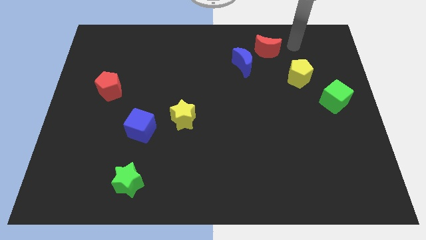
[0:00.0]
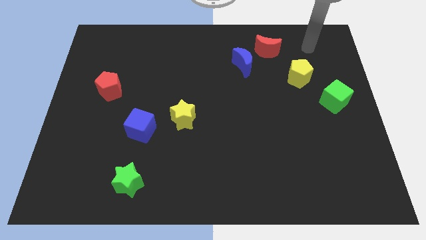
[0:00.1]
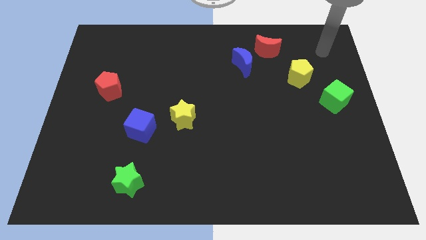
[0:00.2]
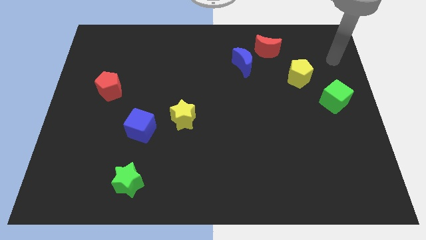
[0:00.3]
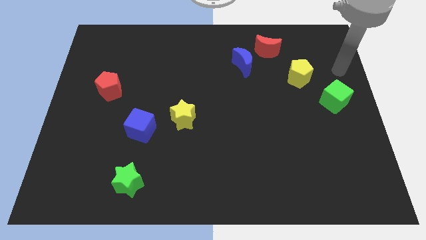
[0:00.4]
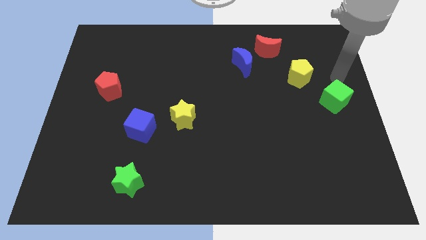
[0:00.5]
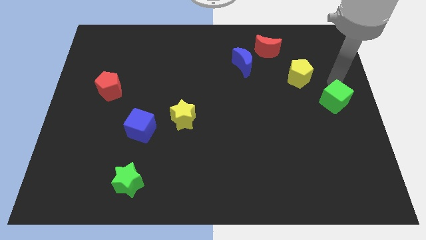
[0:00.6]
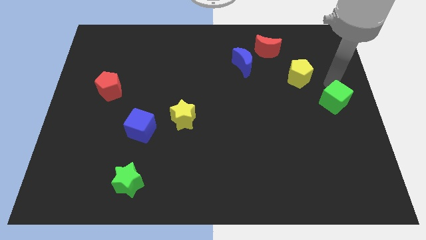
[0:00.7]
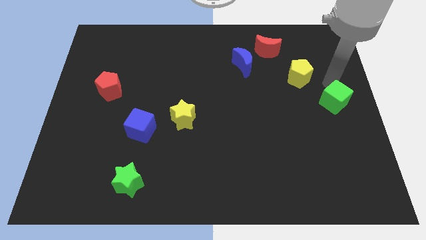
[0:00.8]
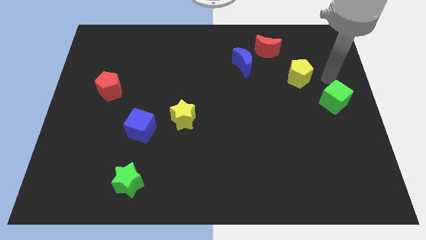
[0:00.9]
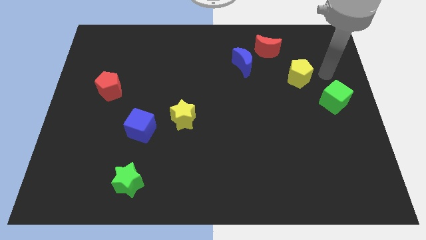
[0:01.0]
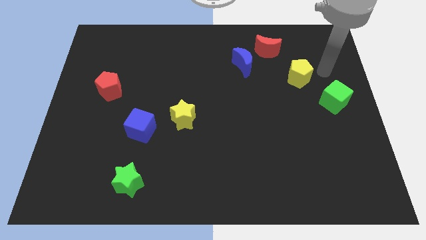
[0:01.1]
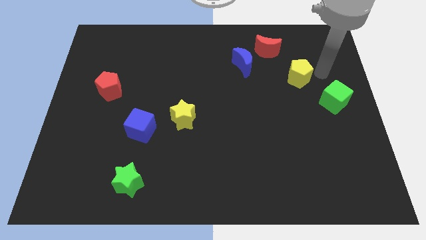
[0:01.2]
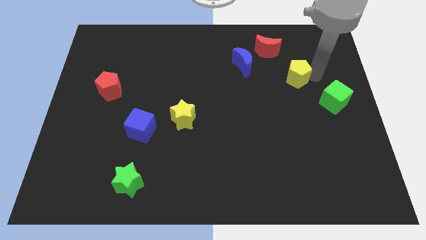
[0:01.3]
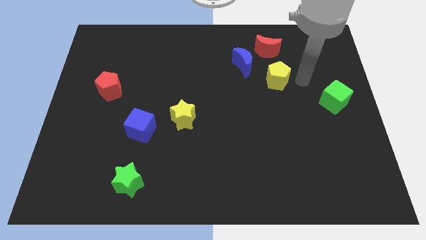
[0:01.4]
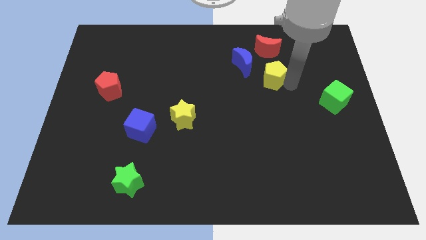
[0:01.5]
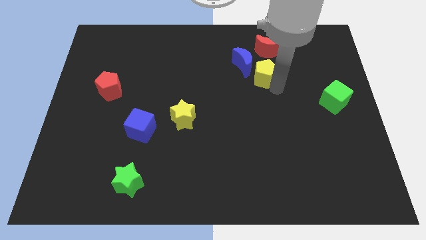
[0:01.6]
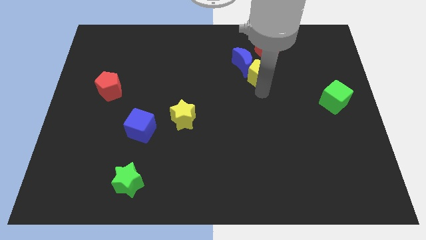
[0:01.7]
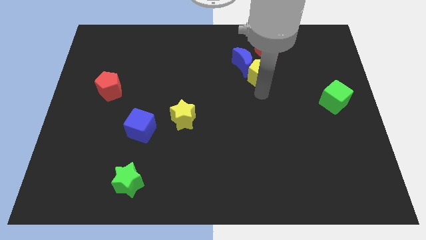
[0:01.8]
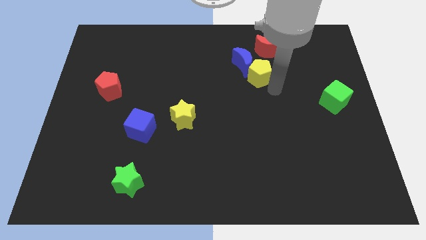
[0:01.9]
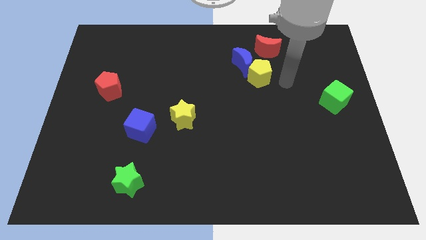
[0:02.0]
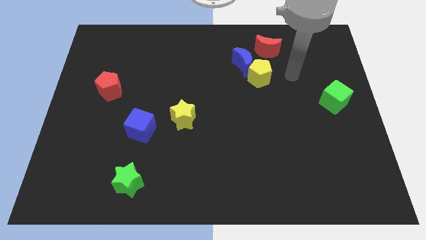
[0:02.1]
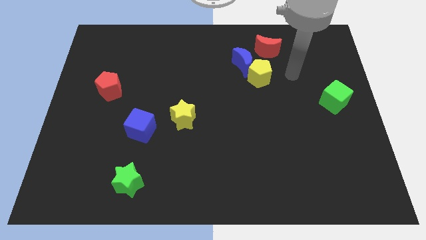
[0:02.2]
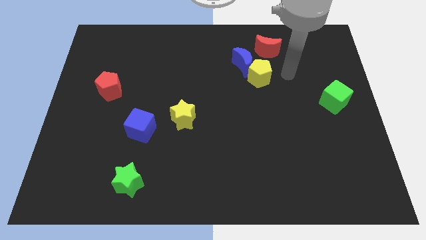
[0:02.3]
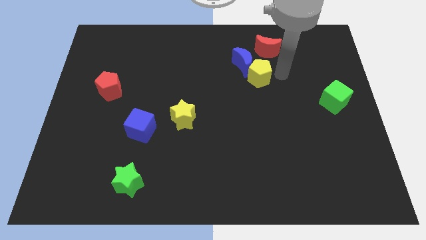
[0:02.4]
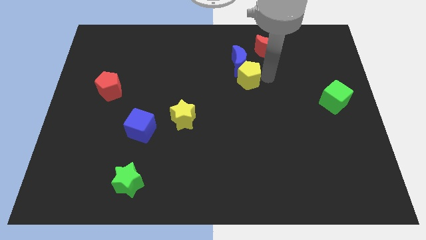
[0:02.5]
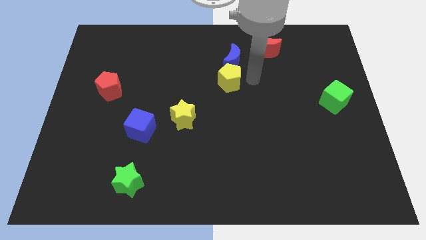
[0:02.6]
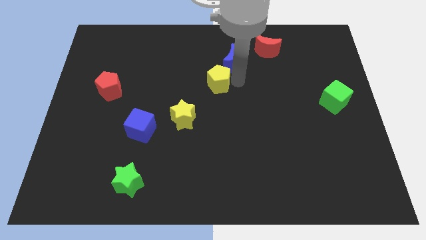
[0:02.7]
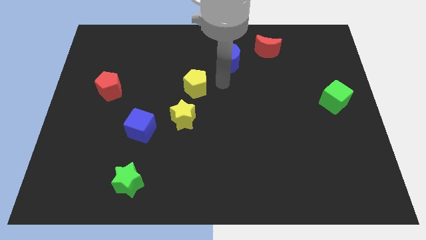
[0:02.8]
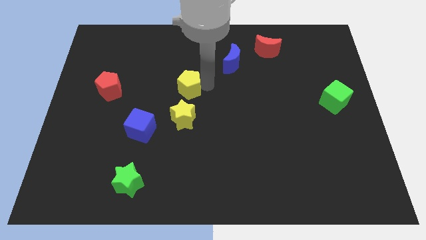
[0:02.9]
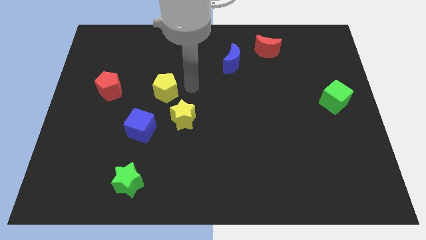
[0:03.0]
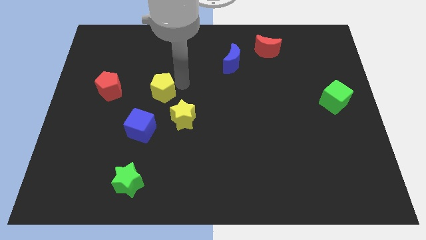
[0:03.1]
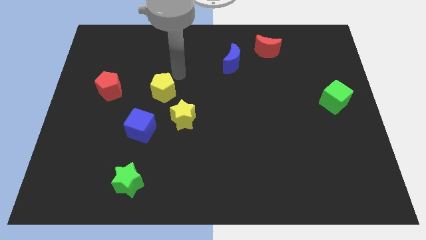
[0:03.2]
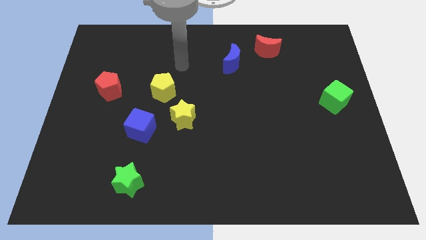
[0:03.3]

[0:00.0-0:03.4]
push the yellow pentagon to the top left of the yellow star

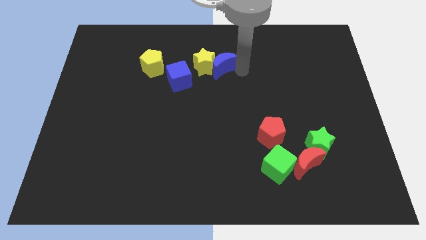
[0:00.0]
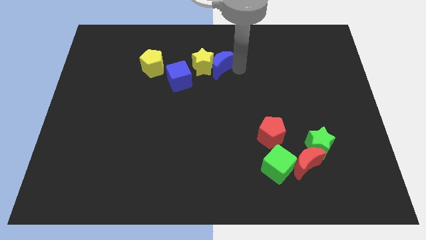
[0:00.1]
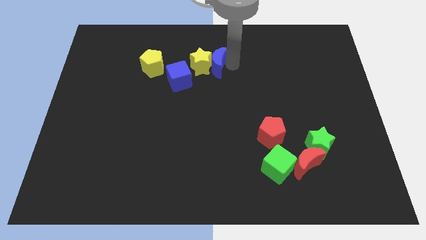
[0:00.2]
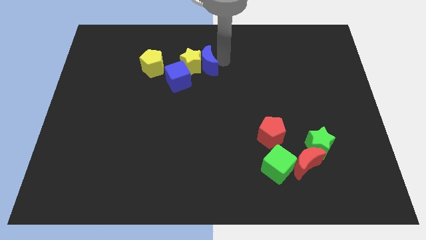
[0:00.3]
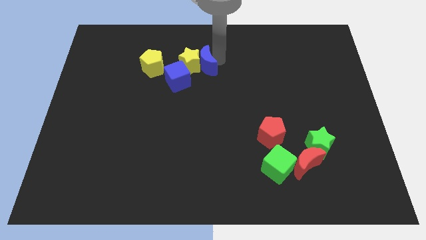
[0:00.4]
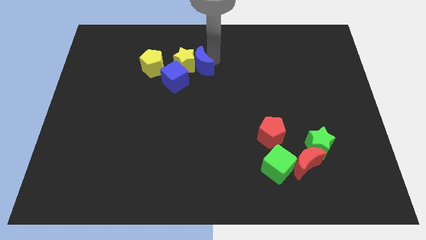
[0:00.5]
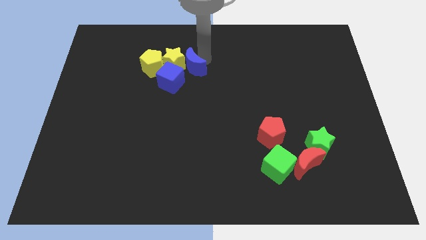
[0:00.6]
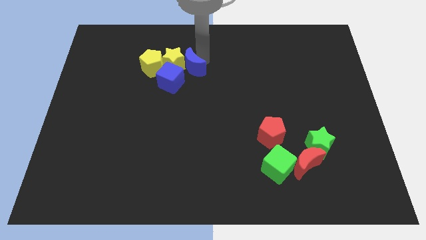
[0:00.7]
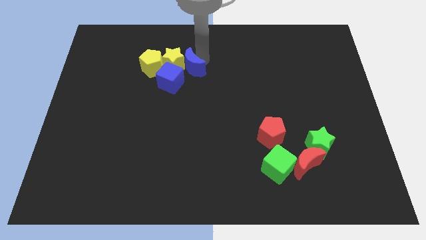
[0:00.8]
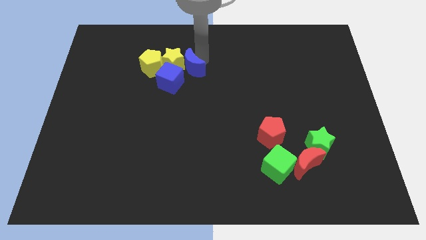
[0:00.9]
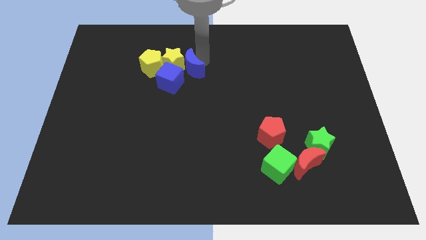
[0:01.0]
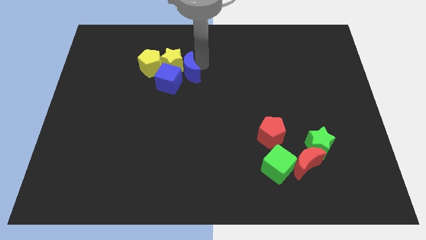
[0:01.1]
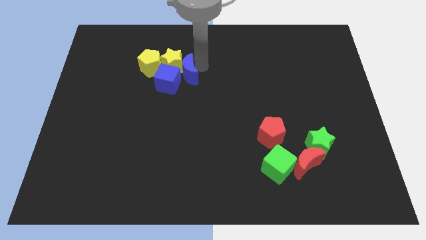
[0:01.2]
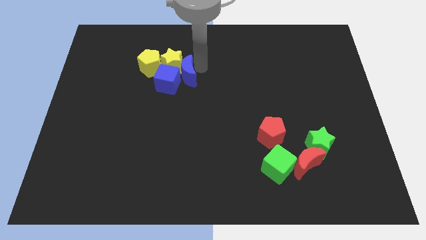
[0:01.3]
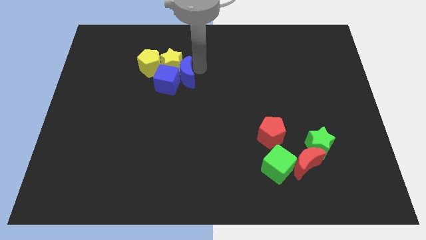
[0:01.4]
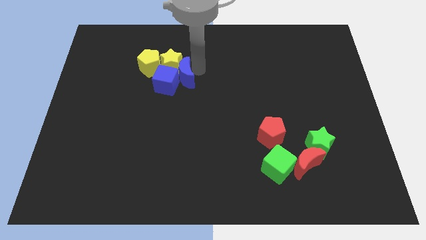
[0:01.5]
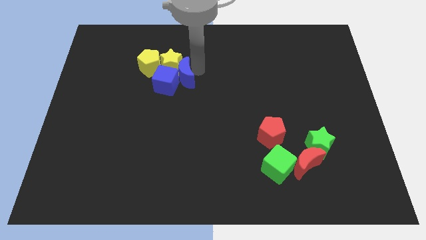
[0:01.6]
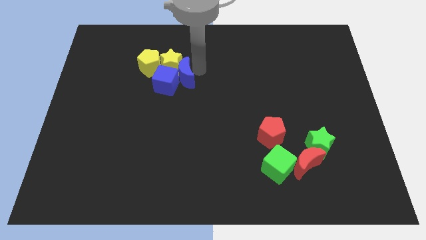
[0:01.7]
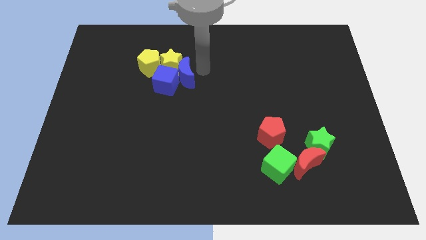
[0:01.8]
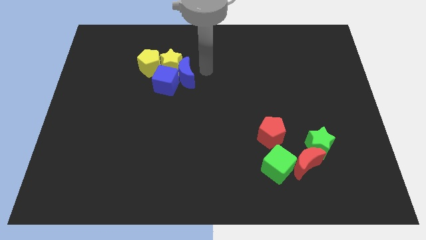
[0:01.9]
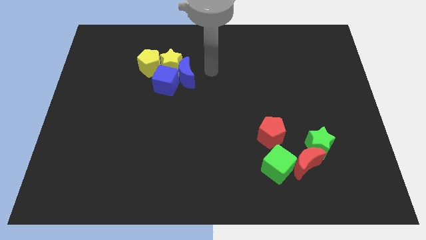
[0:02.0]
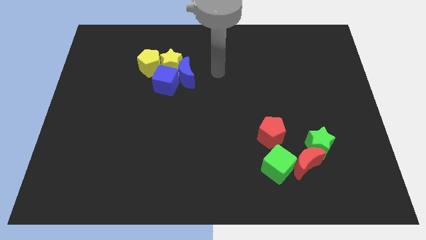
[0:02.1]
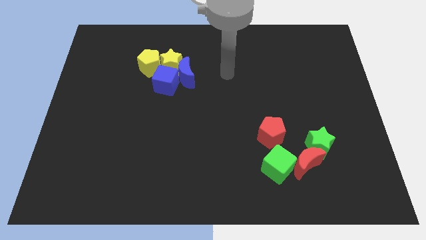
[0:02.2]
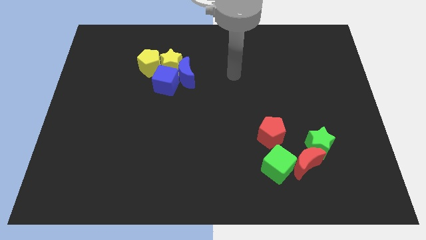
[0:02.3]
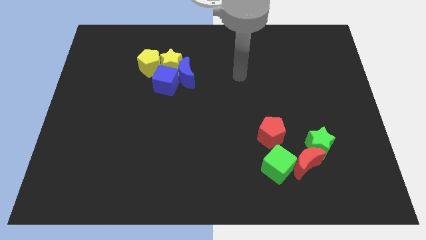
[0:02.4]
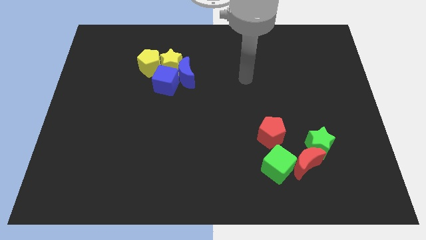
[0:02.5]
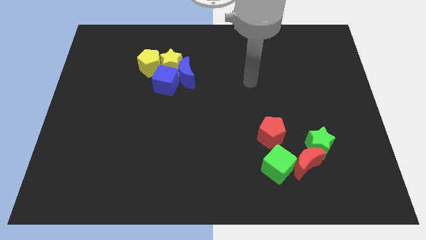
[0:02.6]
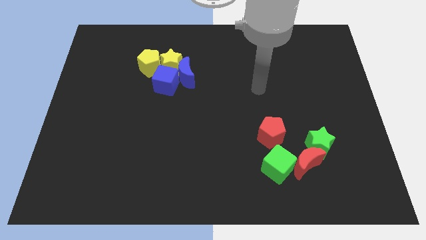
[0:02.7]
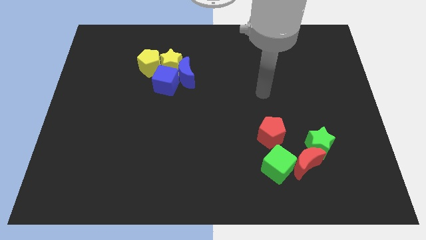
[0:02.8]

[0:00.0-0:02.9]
push the blue half moon into the yellow star and blue cube from the right side

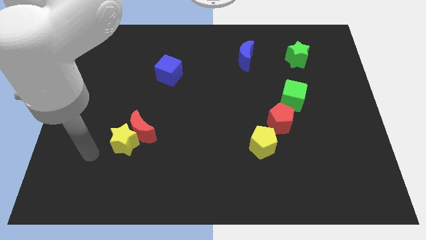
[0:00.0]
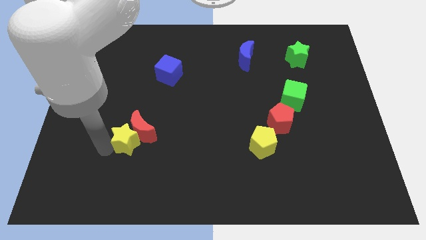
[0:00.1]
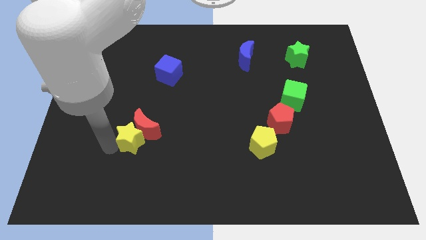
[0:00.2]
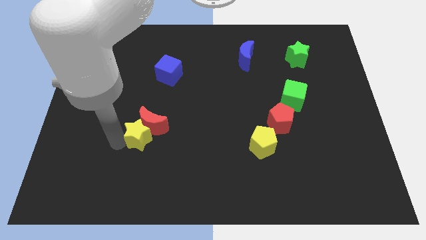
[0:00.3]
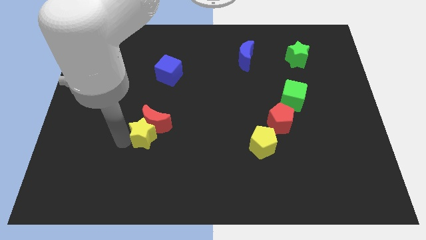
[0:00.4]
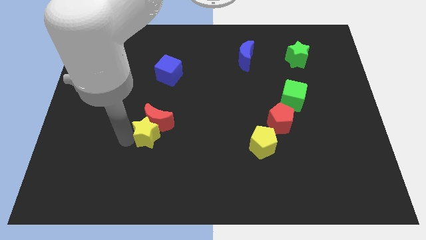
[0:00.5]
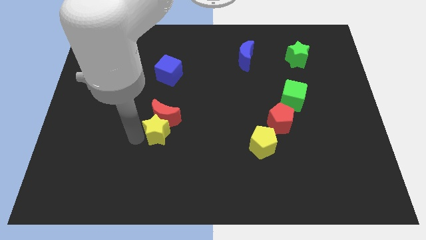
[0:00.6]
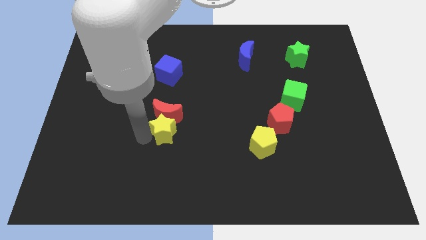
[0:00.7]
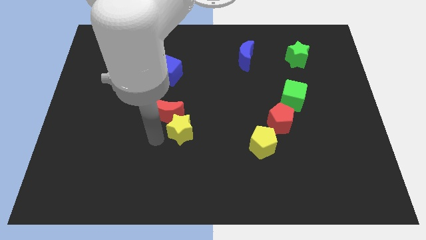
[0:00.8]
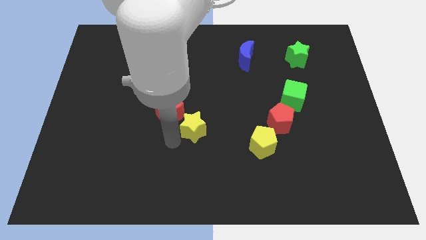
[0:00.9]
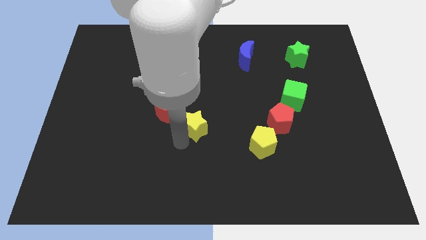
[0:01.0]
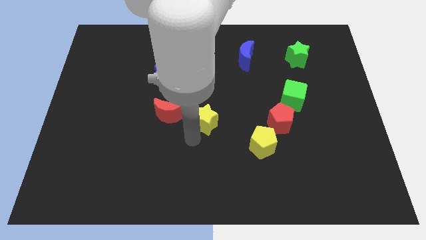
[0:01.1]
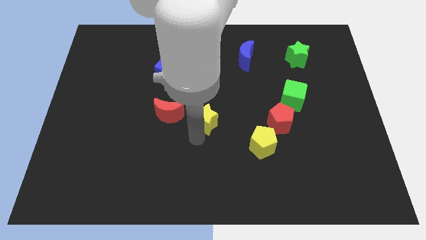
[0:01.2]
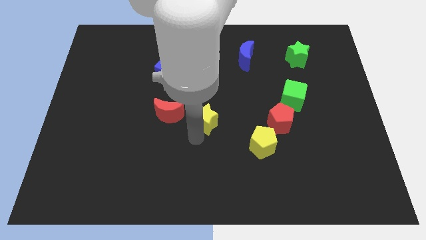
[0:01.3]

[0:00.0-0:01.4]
push the yellow star to the right of the red crescent

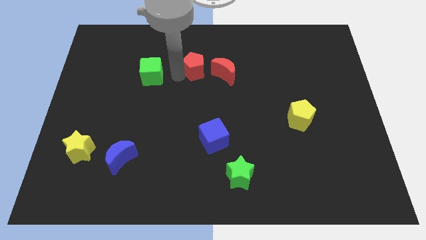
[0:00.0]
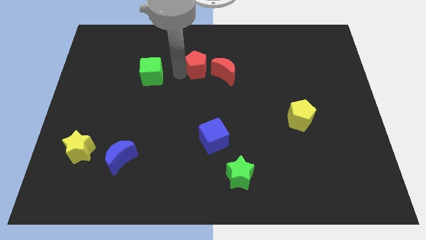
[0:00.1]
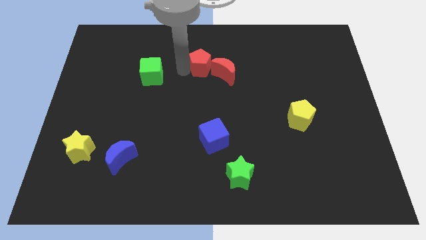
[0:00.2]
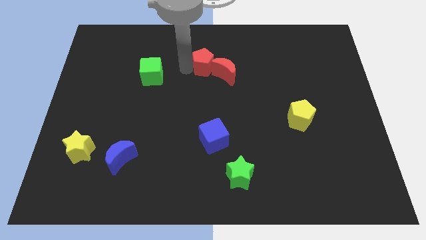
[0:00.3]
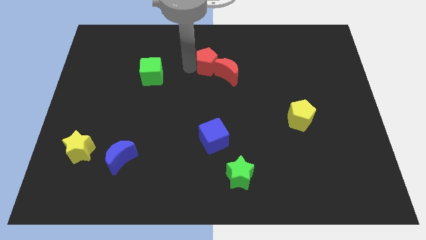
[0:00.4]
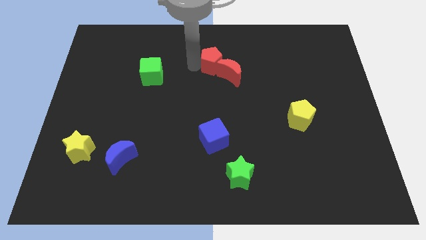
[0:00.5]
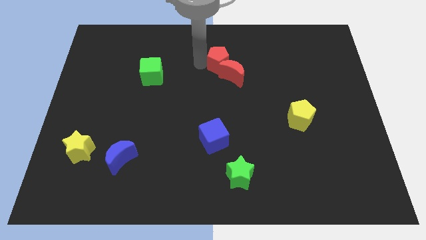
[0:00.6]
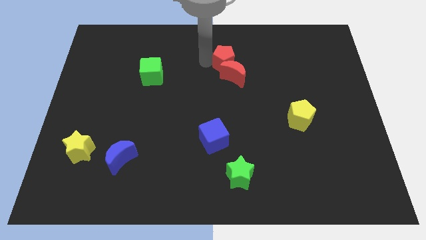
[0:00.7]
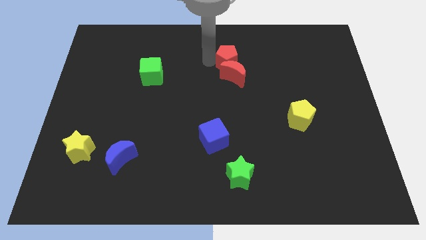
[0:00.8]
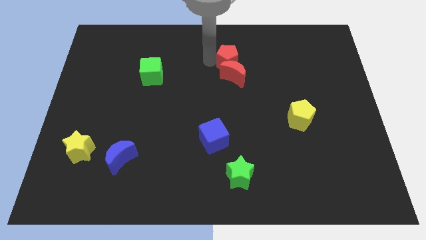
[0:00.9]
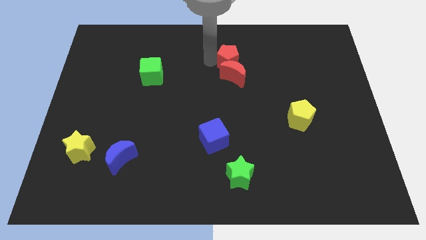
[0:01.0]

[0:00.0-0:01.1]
push the red pentagon to the top side of the red moon

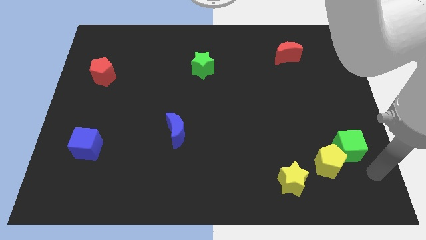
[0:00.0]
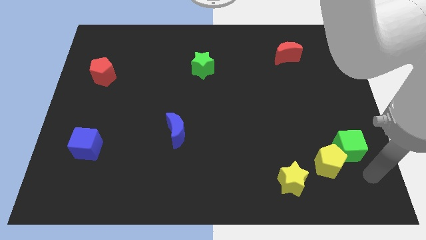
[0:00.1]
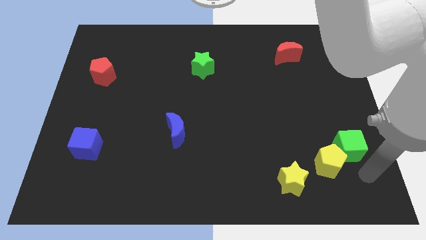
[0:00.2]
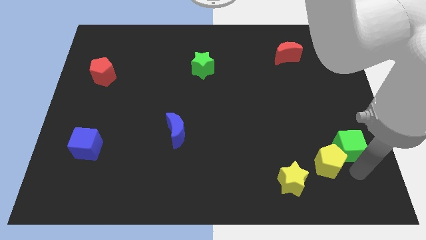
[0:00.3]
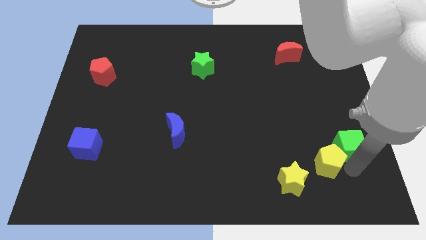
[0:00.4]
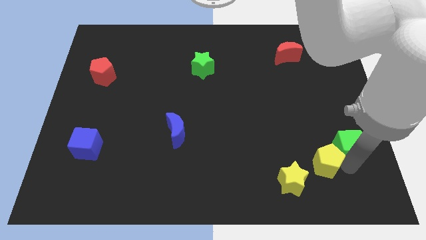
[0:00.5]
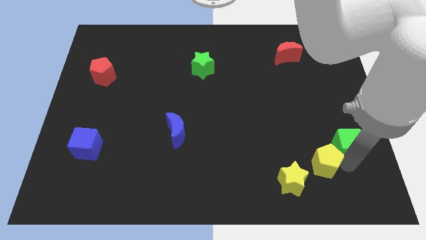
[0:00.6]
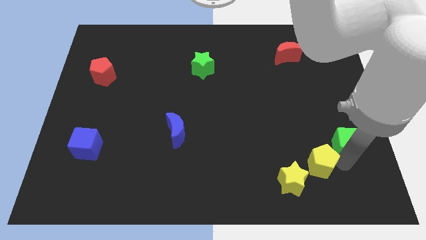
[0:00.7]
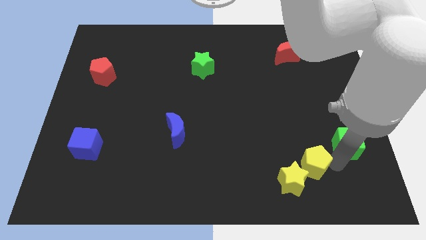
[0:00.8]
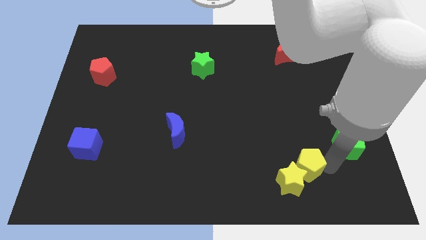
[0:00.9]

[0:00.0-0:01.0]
move the yellow pentagon to the right of the yellow star
